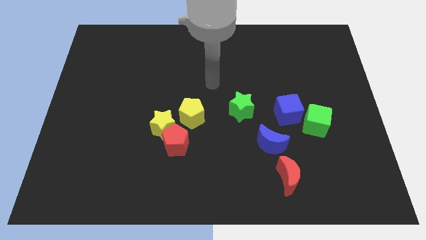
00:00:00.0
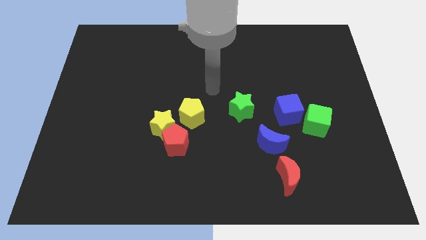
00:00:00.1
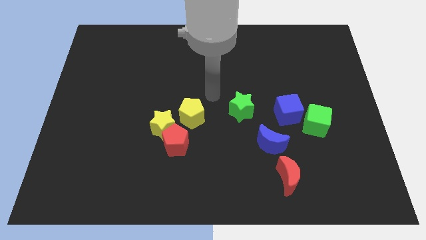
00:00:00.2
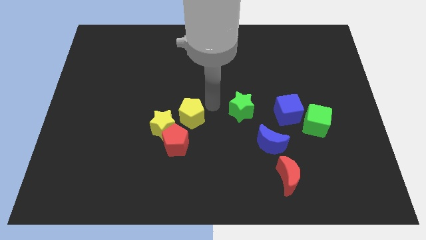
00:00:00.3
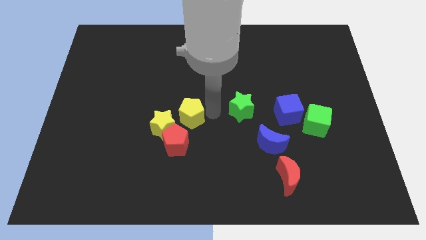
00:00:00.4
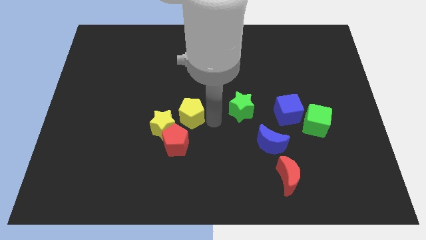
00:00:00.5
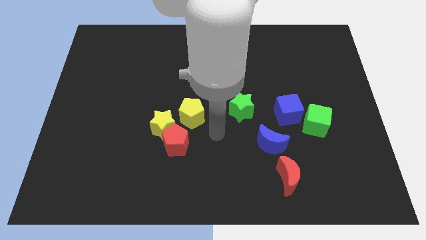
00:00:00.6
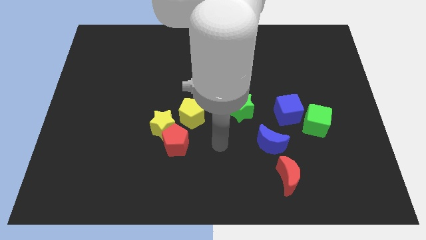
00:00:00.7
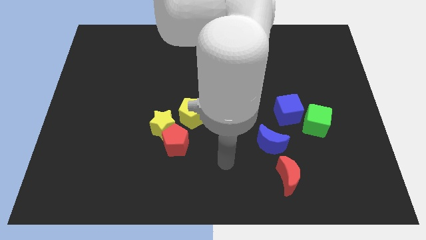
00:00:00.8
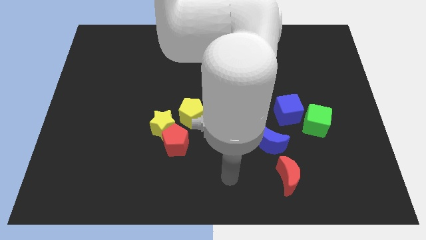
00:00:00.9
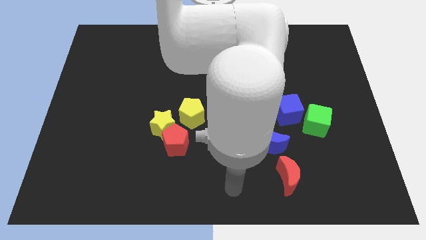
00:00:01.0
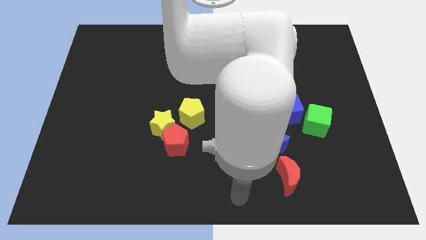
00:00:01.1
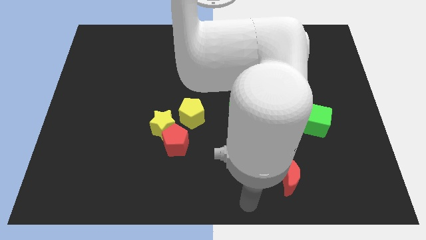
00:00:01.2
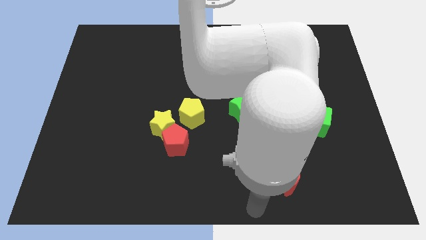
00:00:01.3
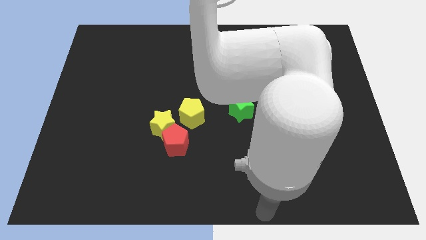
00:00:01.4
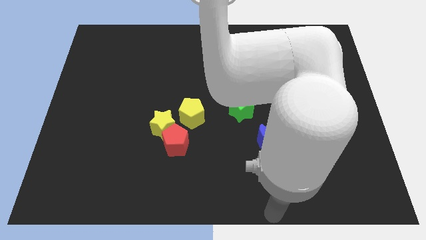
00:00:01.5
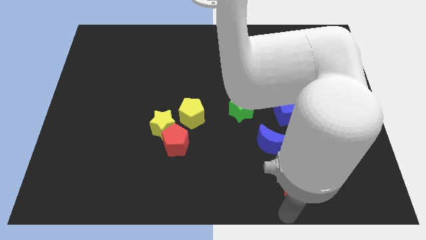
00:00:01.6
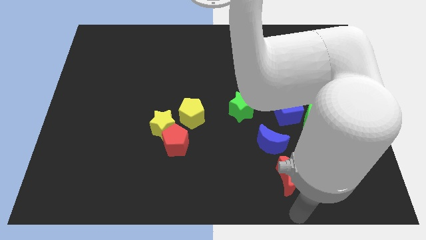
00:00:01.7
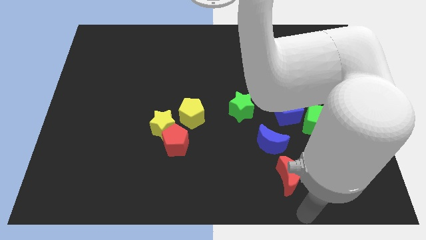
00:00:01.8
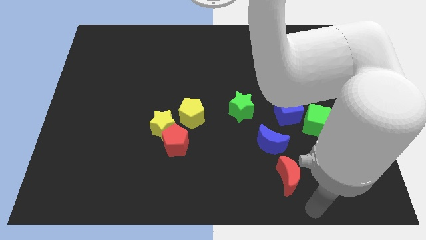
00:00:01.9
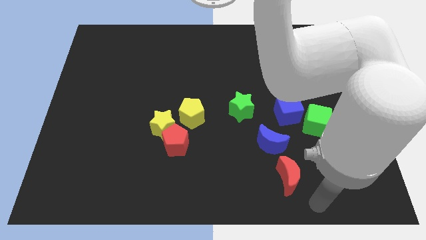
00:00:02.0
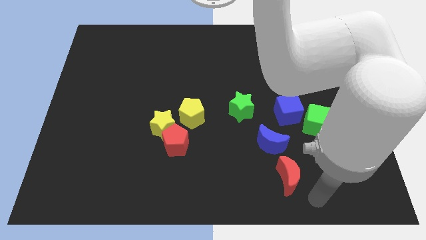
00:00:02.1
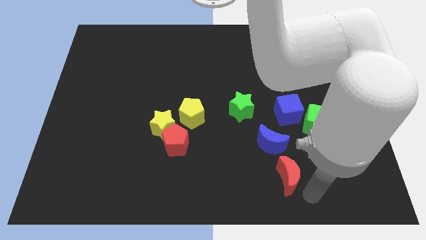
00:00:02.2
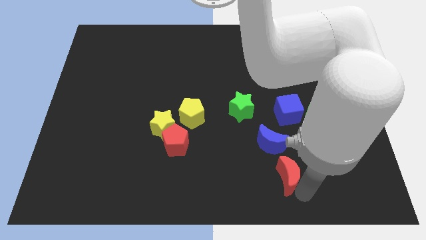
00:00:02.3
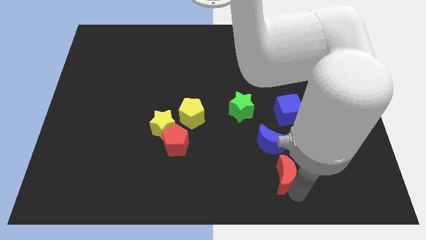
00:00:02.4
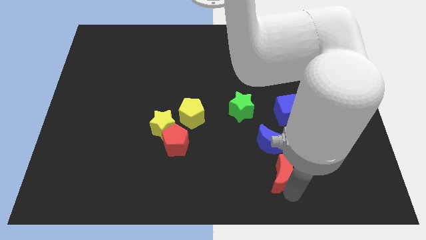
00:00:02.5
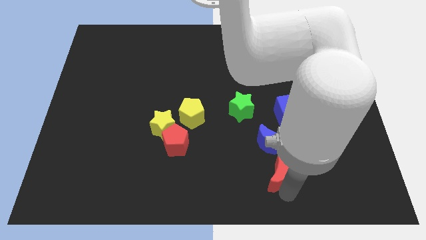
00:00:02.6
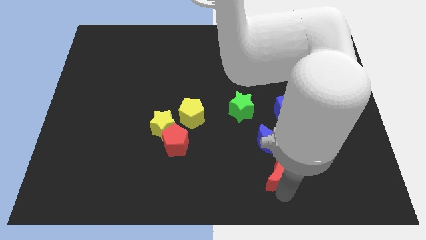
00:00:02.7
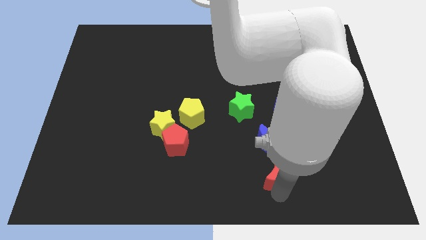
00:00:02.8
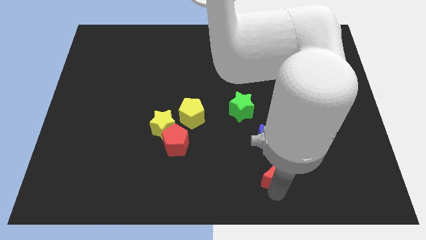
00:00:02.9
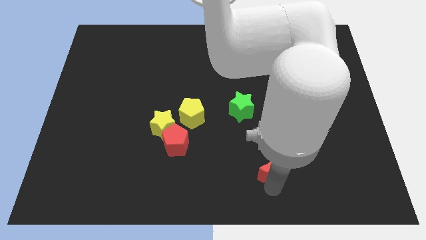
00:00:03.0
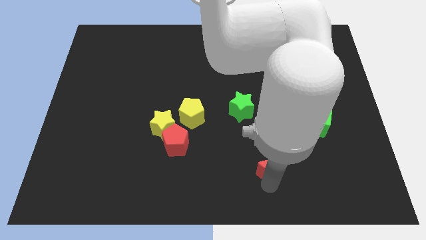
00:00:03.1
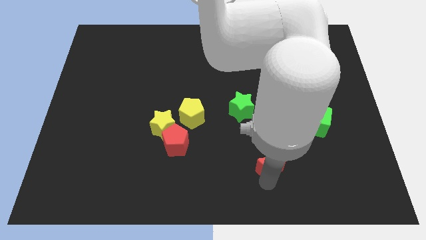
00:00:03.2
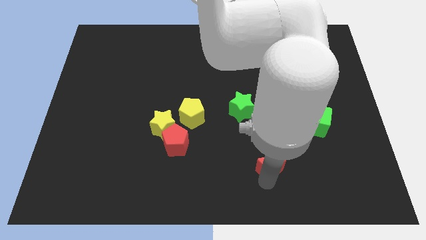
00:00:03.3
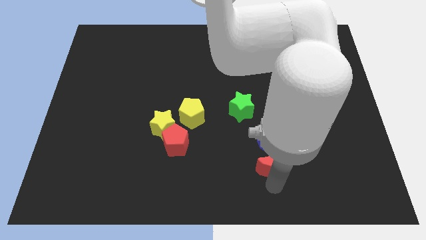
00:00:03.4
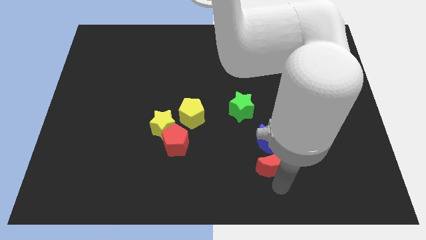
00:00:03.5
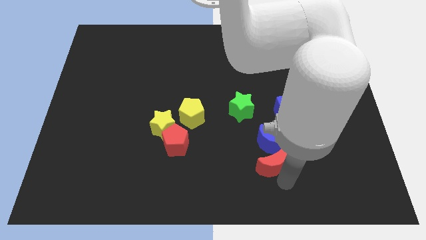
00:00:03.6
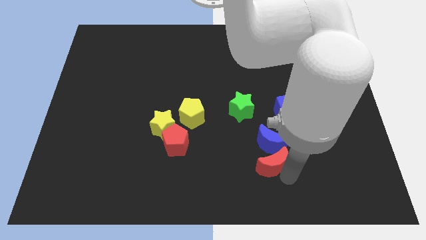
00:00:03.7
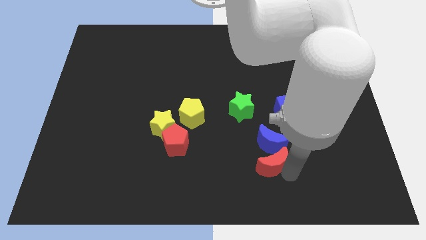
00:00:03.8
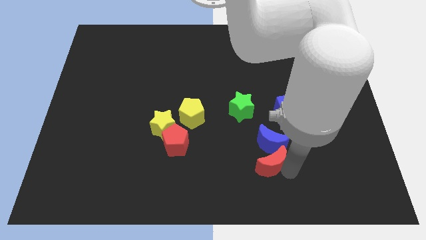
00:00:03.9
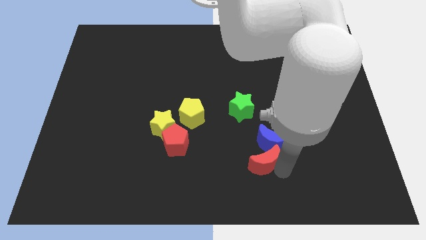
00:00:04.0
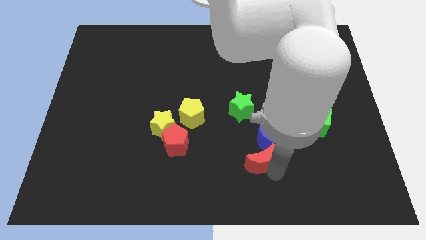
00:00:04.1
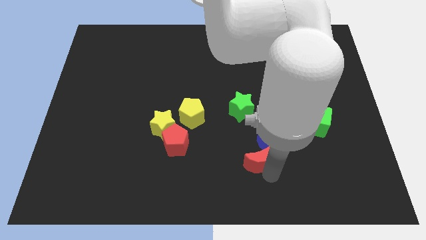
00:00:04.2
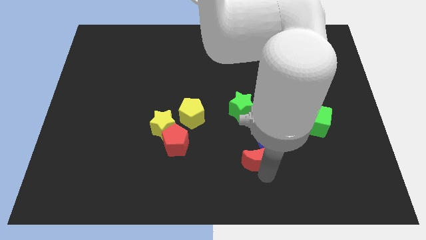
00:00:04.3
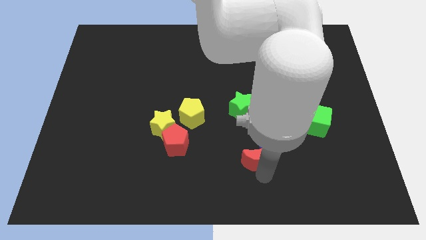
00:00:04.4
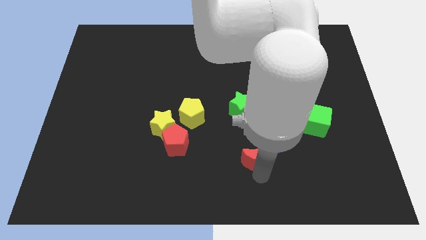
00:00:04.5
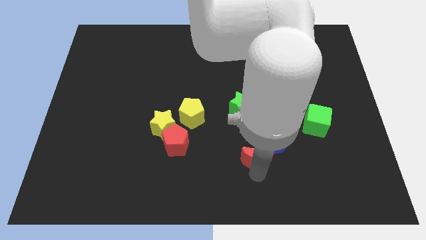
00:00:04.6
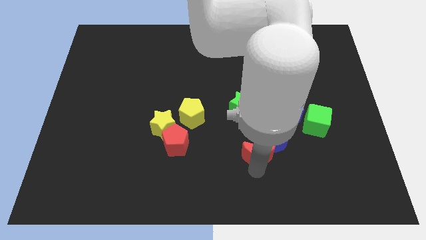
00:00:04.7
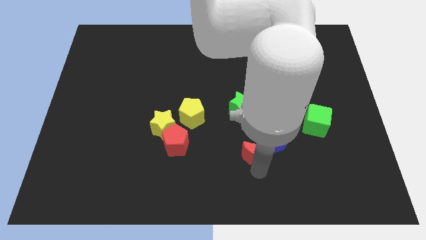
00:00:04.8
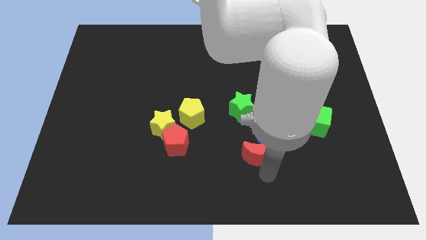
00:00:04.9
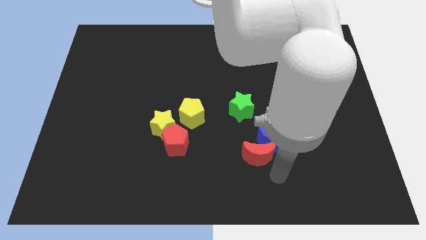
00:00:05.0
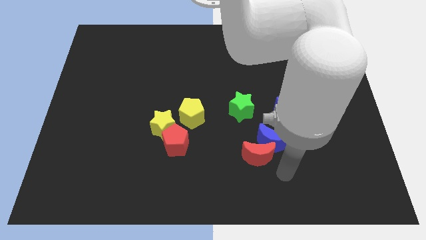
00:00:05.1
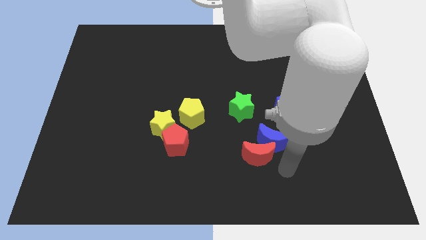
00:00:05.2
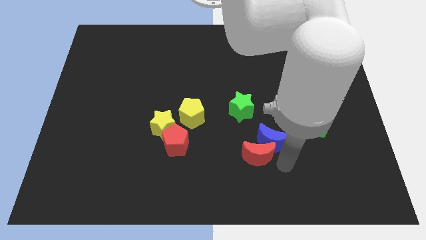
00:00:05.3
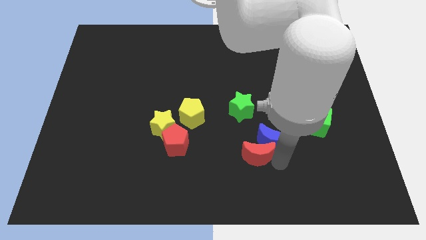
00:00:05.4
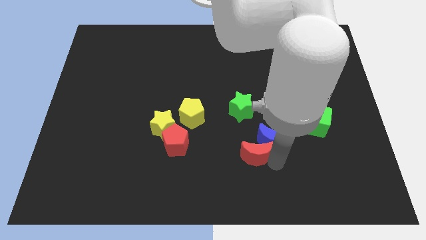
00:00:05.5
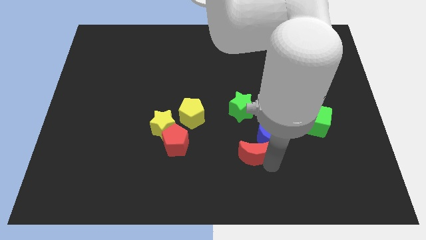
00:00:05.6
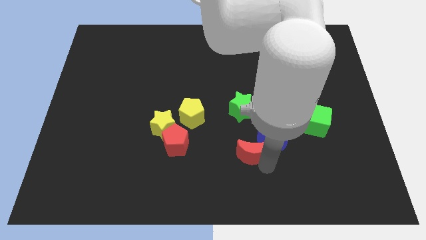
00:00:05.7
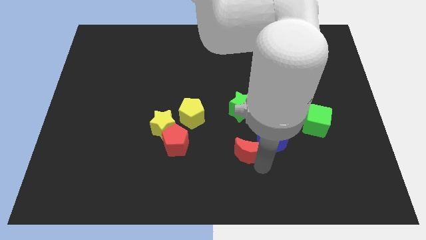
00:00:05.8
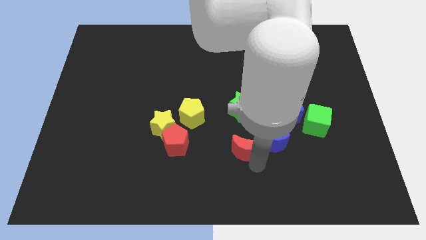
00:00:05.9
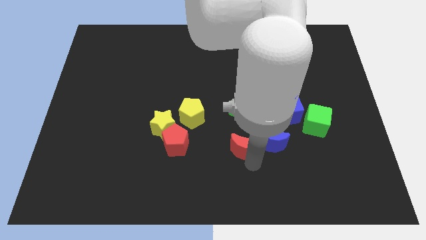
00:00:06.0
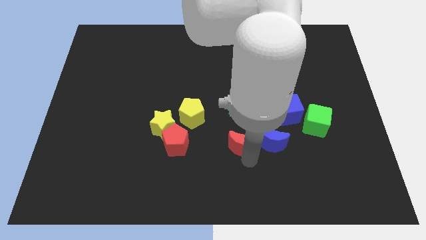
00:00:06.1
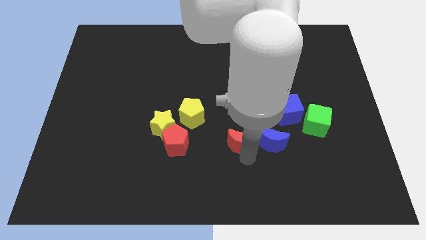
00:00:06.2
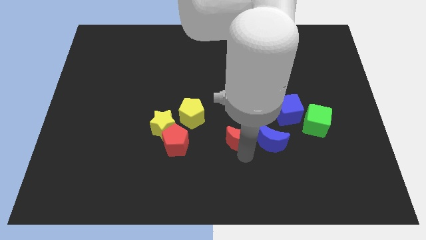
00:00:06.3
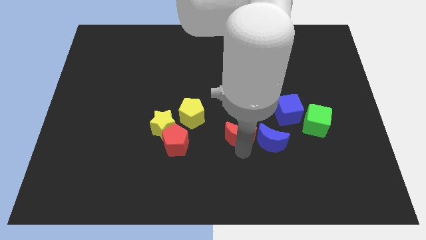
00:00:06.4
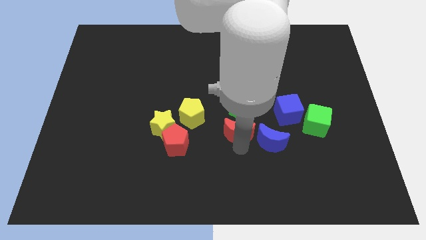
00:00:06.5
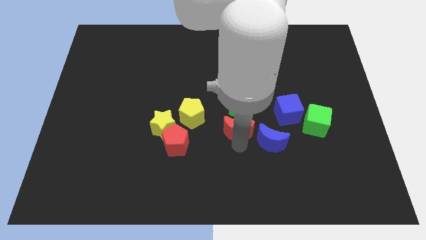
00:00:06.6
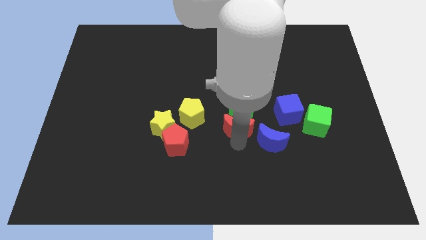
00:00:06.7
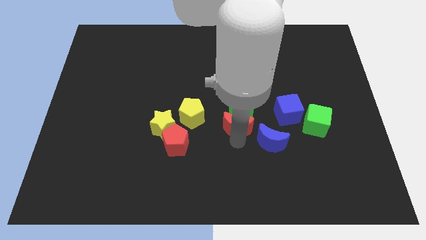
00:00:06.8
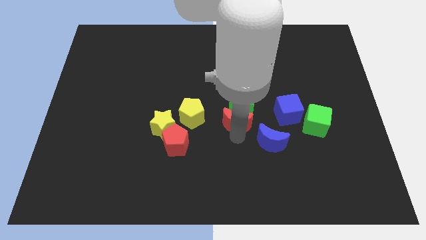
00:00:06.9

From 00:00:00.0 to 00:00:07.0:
push the red moon to the green star

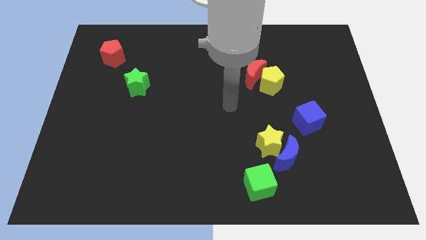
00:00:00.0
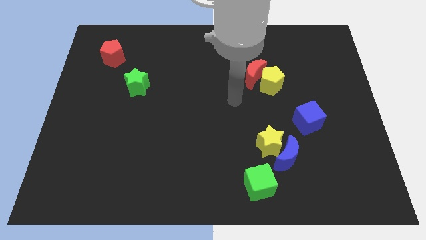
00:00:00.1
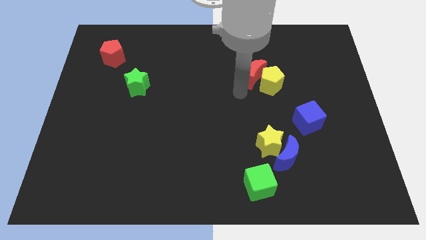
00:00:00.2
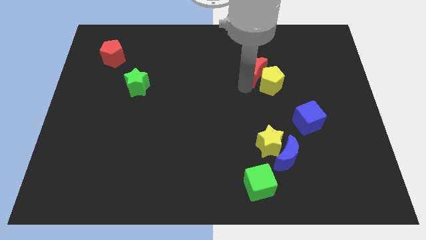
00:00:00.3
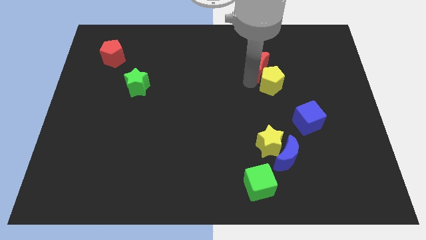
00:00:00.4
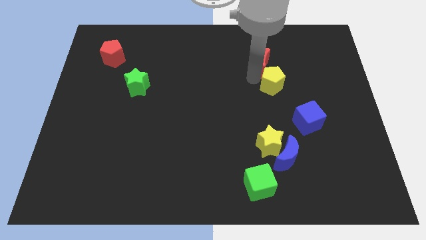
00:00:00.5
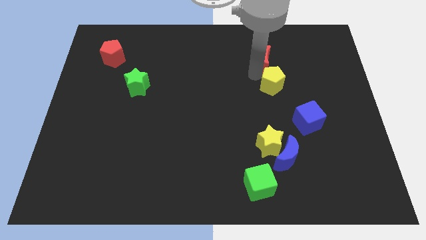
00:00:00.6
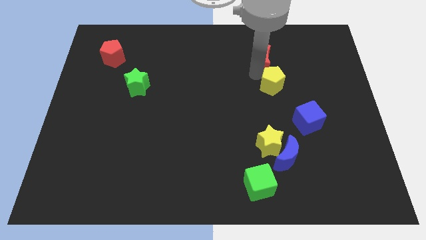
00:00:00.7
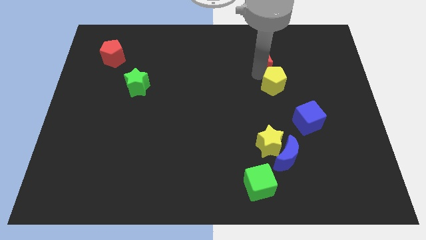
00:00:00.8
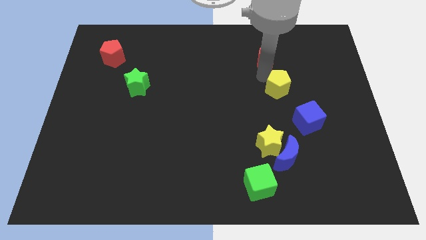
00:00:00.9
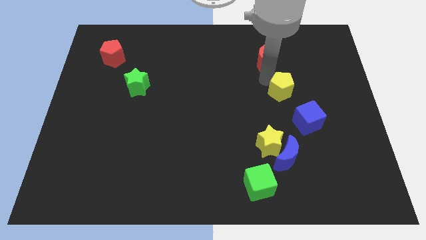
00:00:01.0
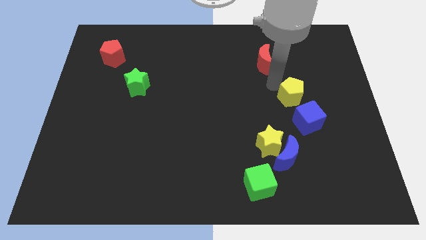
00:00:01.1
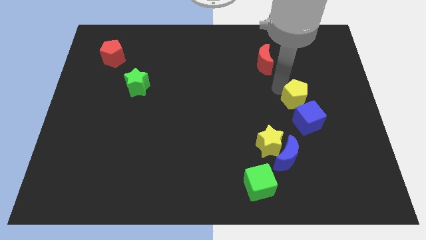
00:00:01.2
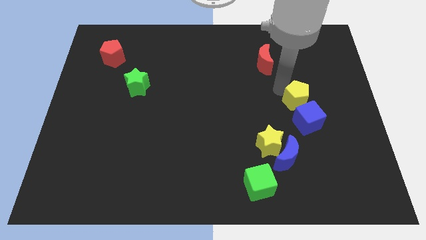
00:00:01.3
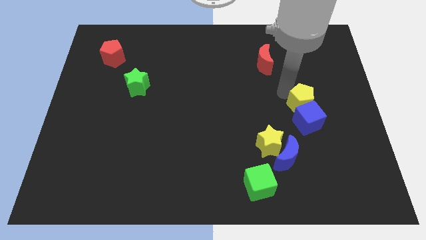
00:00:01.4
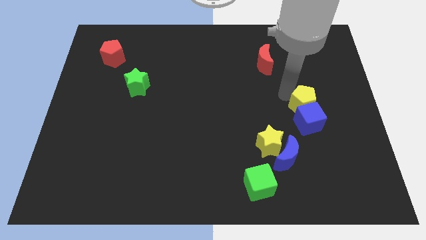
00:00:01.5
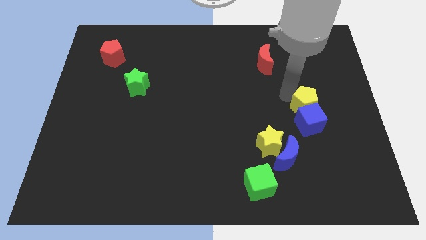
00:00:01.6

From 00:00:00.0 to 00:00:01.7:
put the yellow pentagon towards the blue cube
